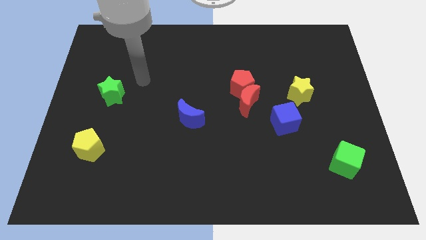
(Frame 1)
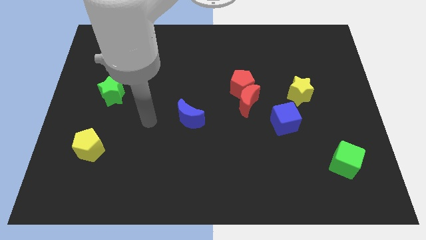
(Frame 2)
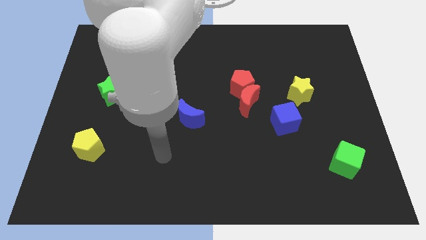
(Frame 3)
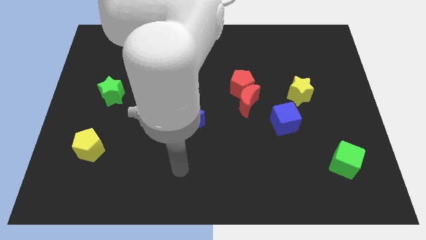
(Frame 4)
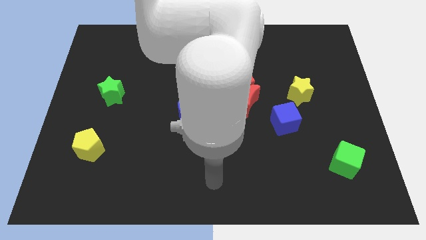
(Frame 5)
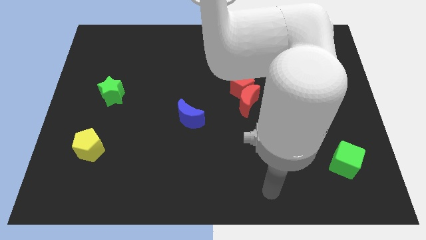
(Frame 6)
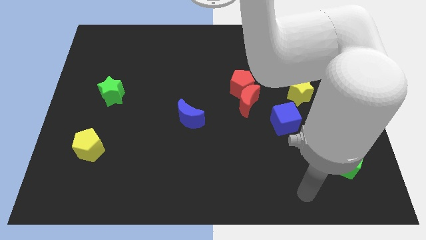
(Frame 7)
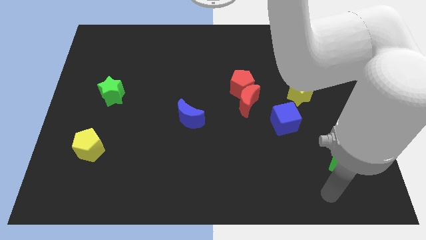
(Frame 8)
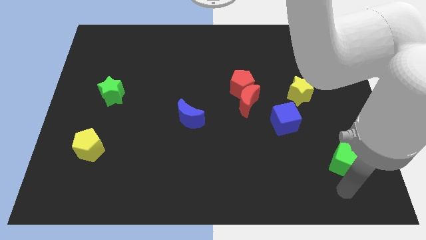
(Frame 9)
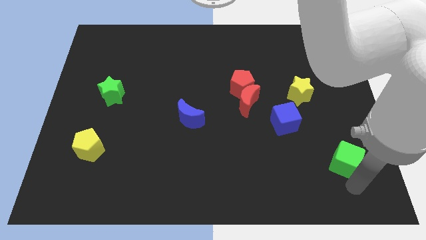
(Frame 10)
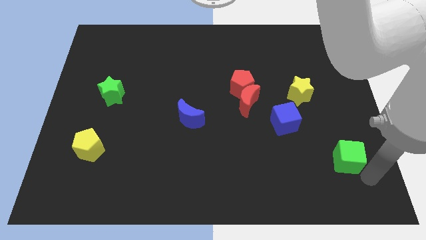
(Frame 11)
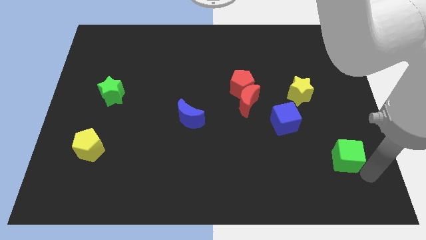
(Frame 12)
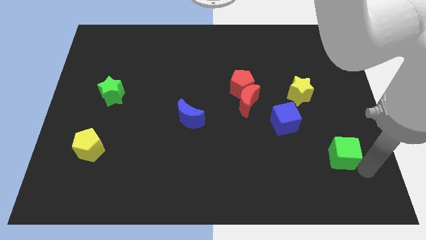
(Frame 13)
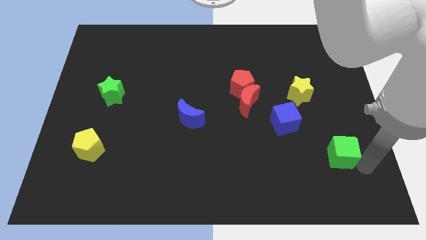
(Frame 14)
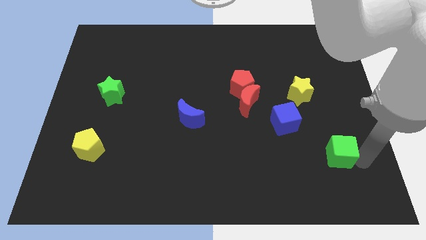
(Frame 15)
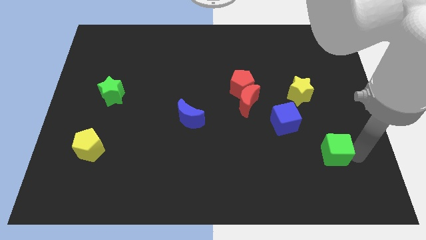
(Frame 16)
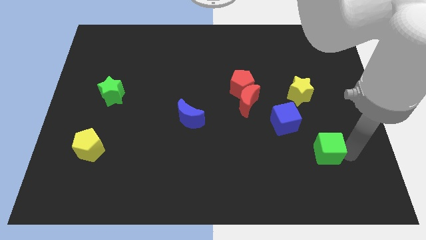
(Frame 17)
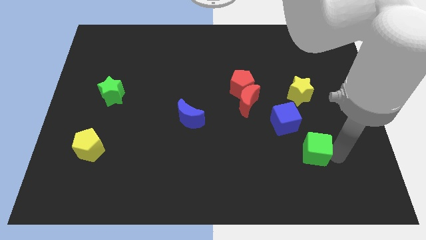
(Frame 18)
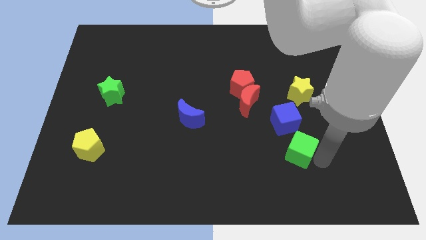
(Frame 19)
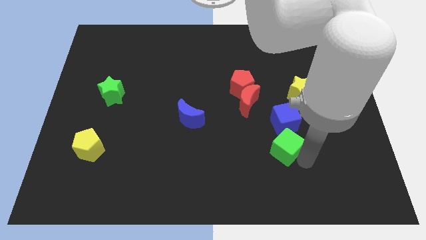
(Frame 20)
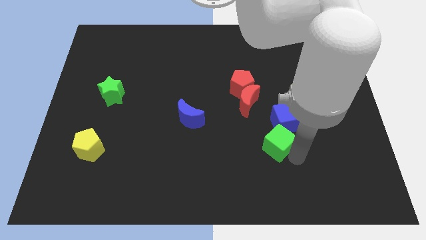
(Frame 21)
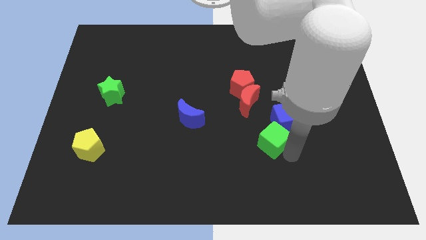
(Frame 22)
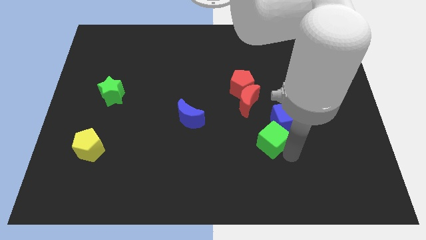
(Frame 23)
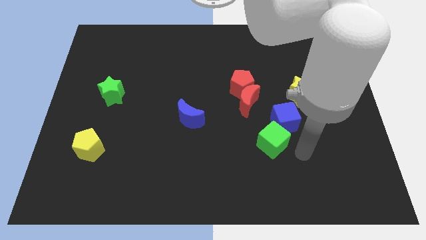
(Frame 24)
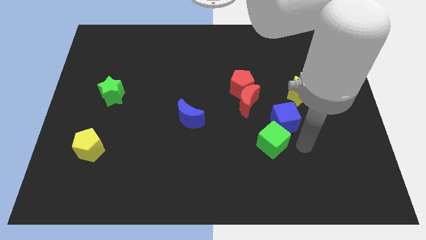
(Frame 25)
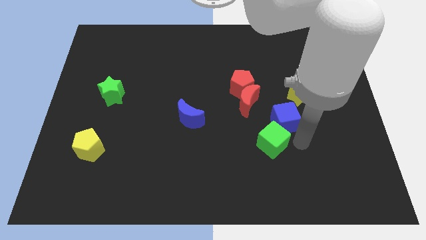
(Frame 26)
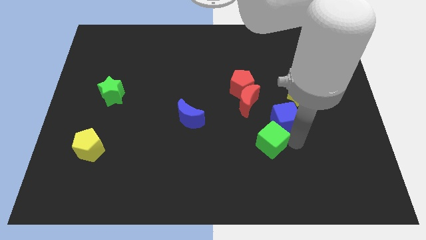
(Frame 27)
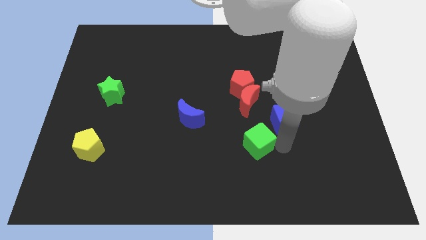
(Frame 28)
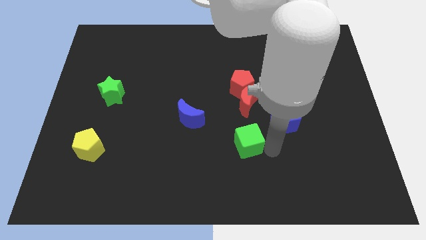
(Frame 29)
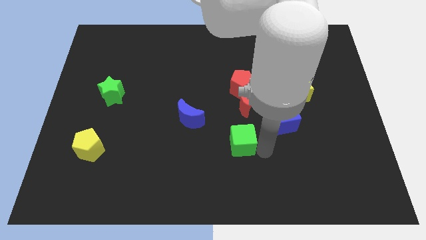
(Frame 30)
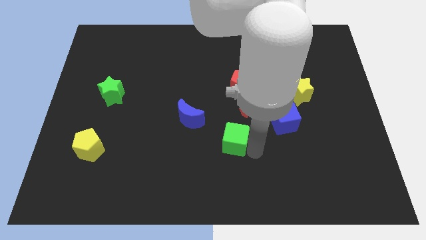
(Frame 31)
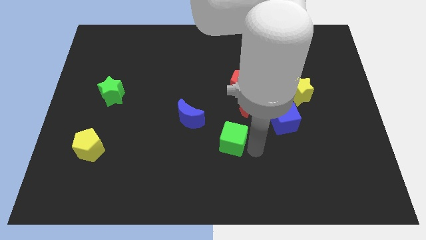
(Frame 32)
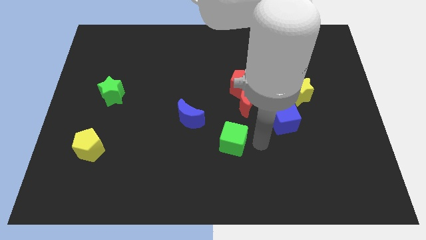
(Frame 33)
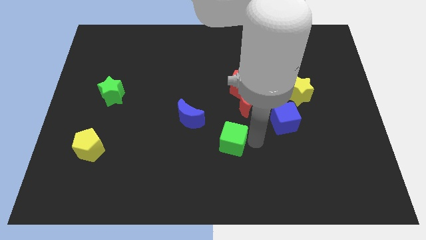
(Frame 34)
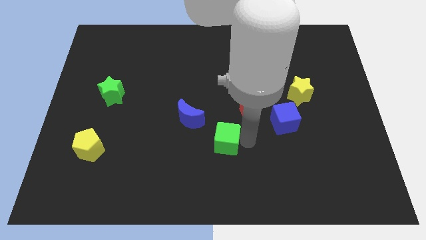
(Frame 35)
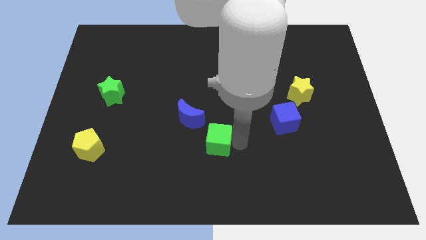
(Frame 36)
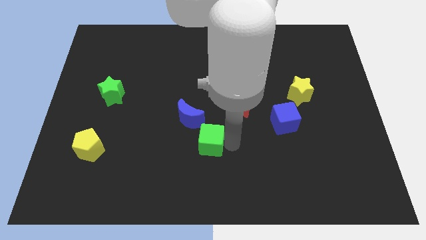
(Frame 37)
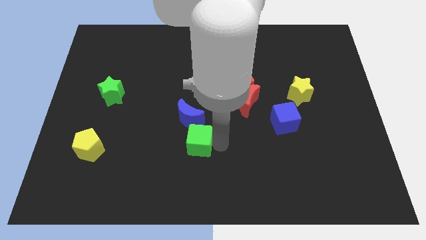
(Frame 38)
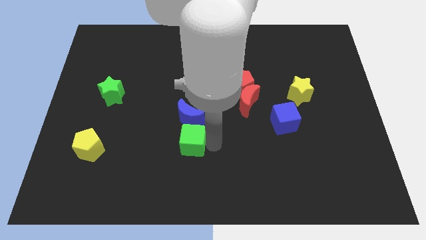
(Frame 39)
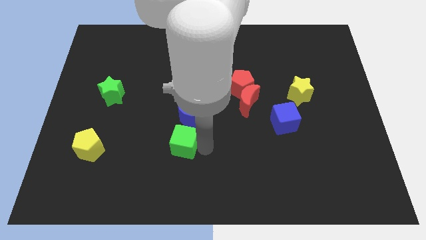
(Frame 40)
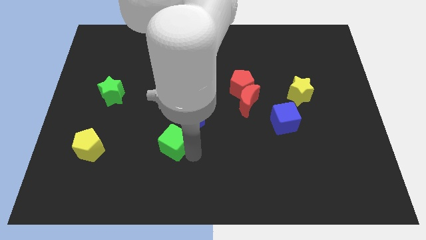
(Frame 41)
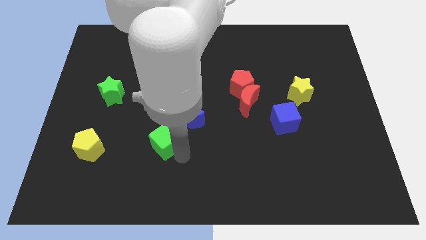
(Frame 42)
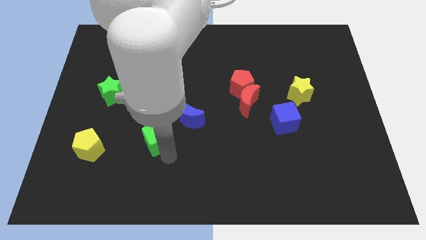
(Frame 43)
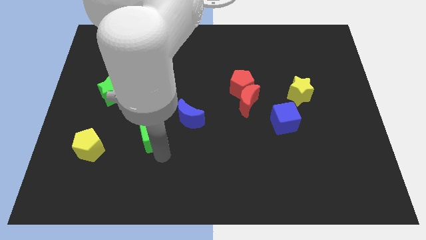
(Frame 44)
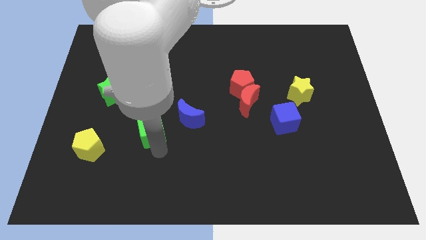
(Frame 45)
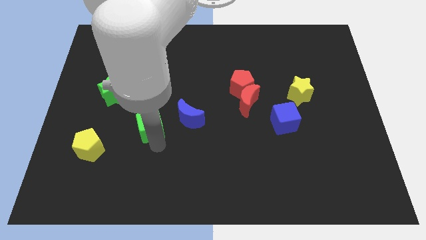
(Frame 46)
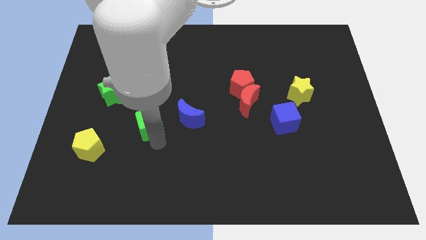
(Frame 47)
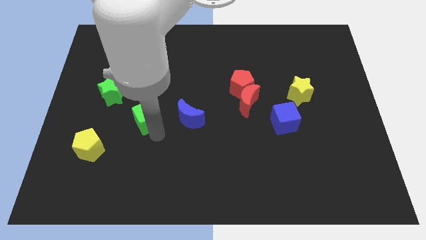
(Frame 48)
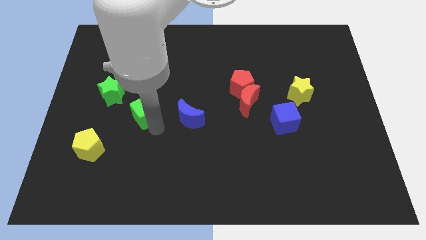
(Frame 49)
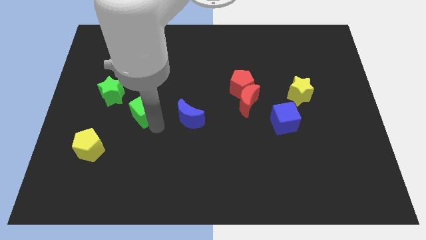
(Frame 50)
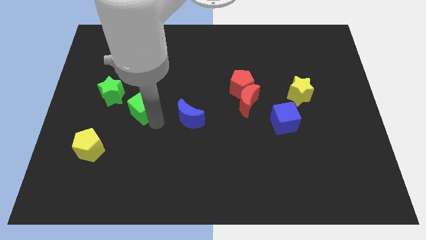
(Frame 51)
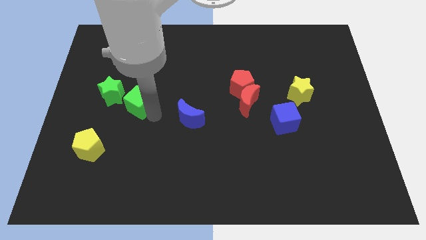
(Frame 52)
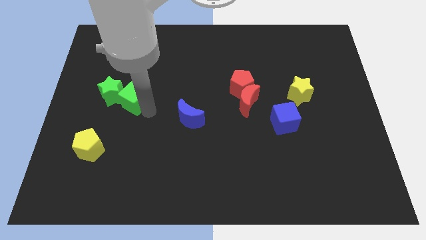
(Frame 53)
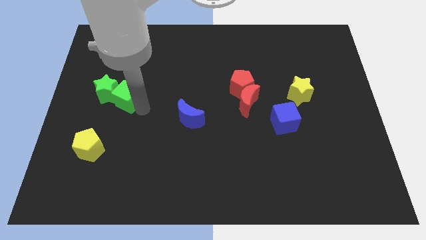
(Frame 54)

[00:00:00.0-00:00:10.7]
slide the green cube to the green star

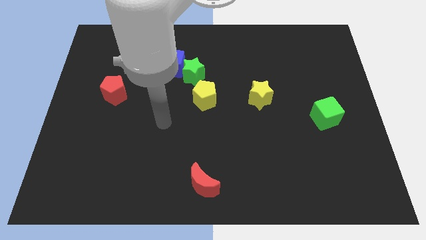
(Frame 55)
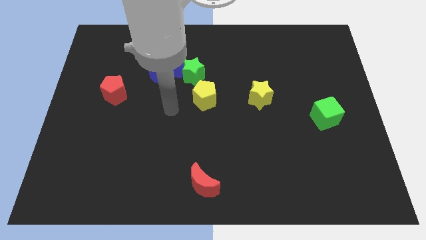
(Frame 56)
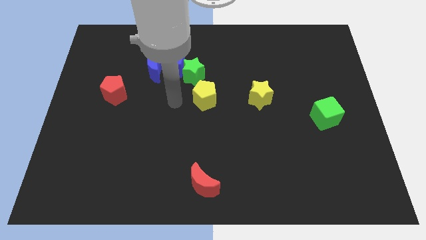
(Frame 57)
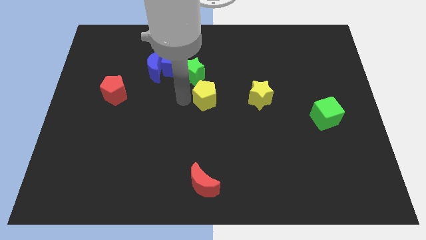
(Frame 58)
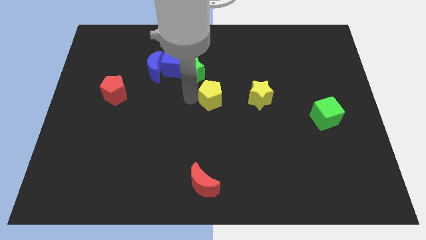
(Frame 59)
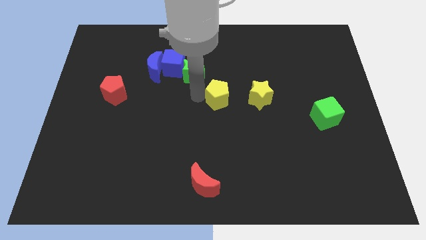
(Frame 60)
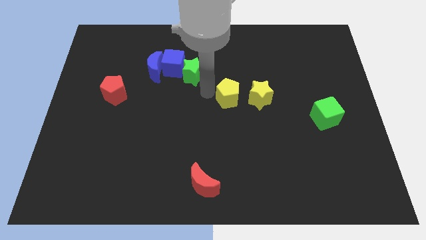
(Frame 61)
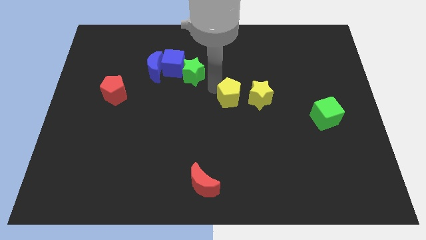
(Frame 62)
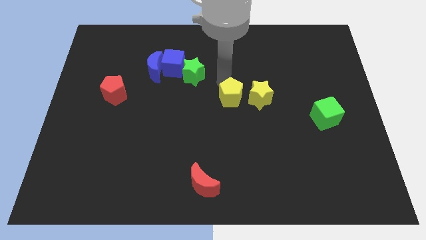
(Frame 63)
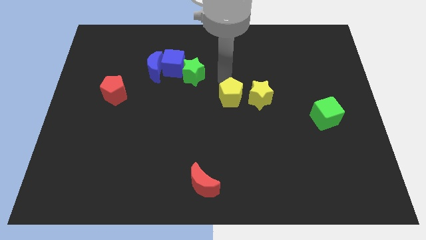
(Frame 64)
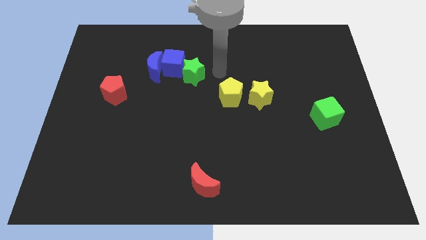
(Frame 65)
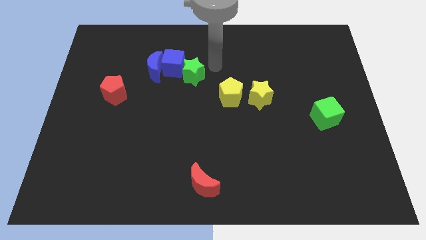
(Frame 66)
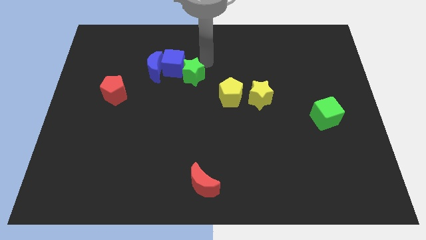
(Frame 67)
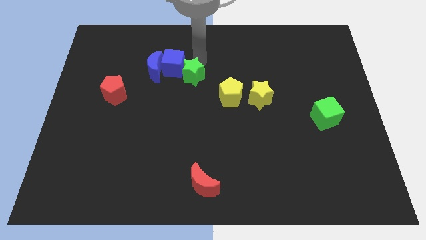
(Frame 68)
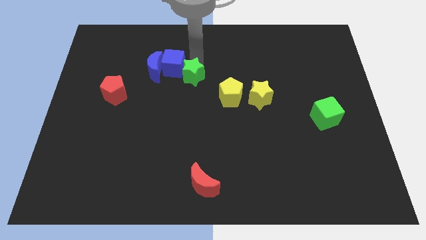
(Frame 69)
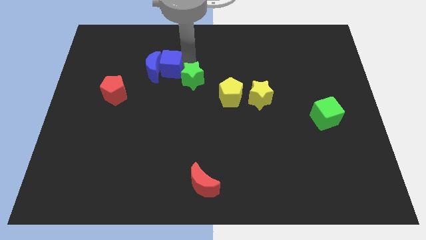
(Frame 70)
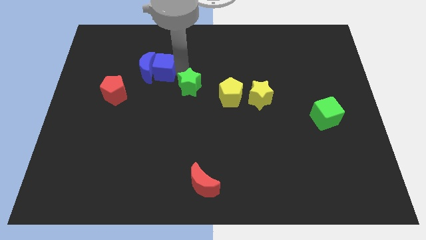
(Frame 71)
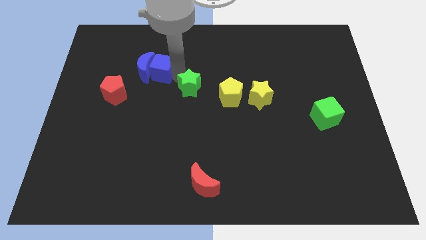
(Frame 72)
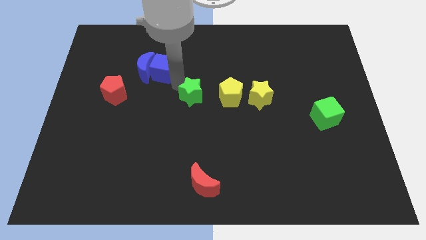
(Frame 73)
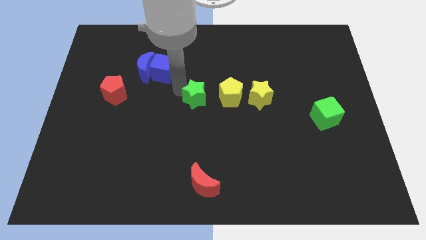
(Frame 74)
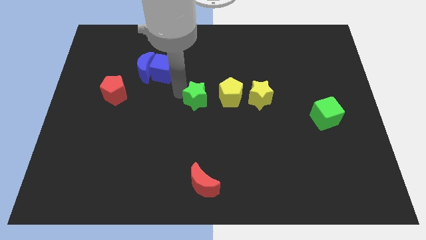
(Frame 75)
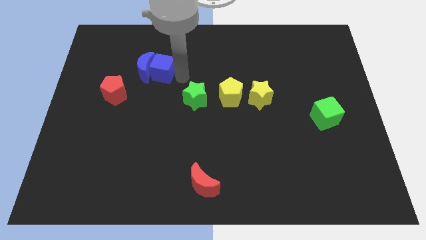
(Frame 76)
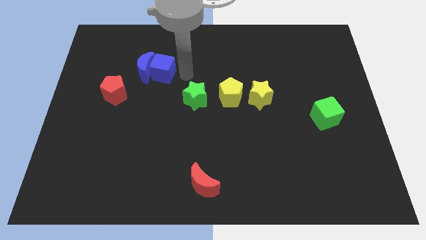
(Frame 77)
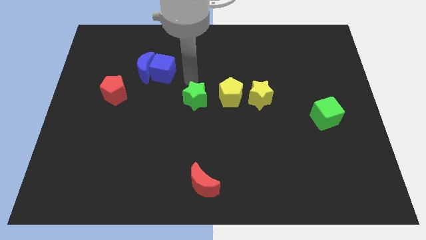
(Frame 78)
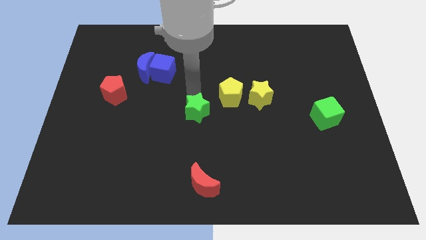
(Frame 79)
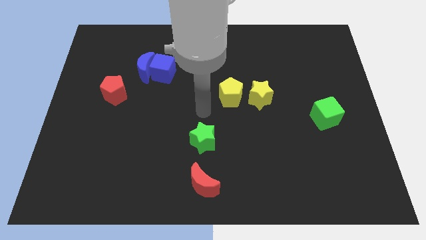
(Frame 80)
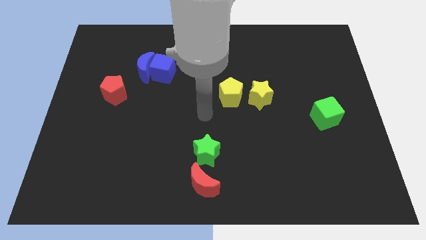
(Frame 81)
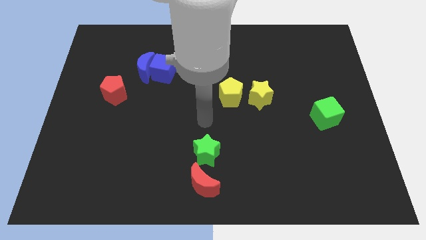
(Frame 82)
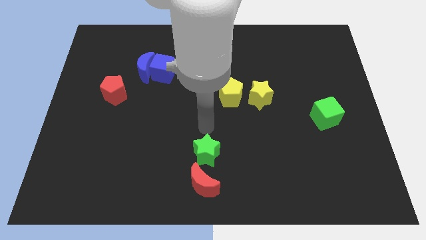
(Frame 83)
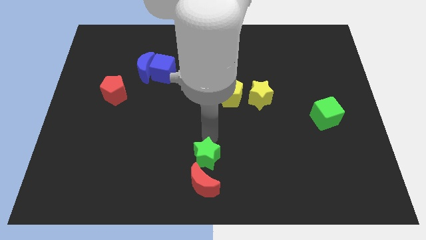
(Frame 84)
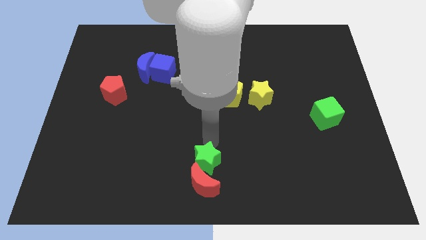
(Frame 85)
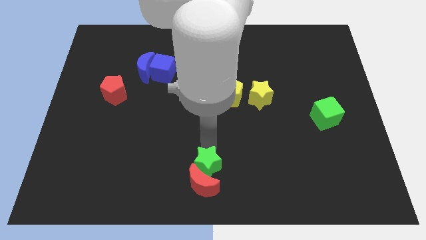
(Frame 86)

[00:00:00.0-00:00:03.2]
put the green star to the red moon
